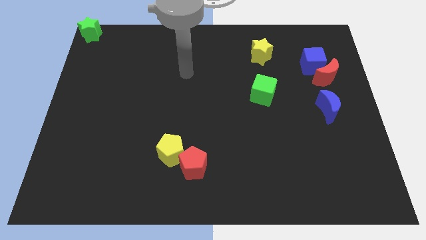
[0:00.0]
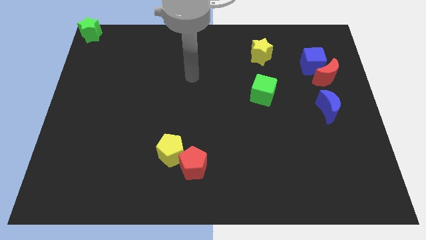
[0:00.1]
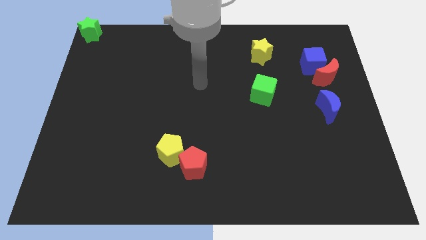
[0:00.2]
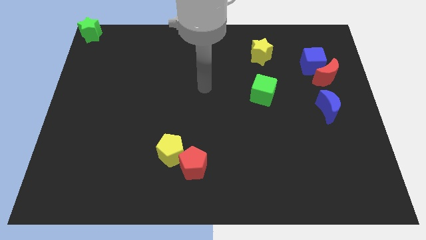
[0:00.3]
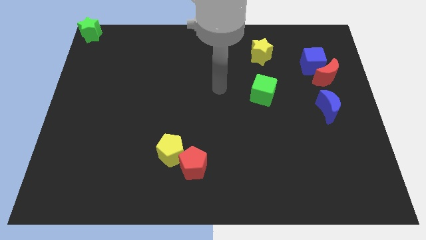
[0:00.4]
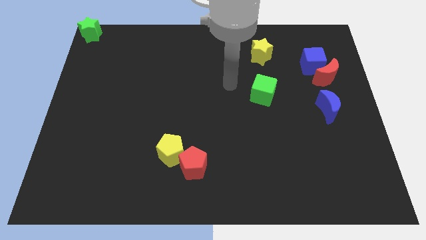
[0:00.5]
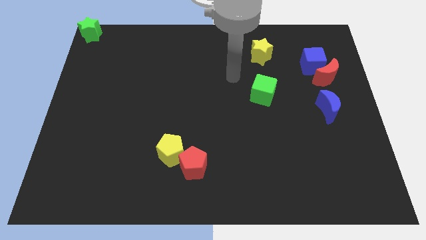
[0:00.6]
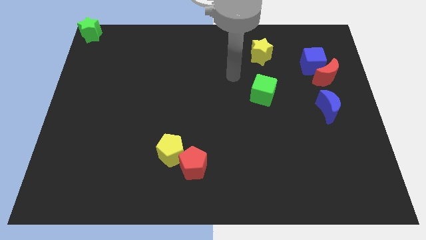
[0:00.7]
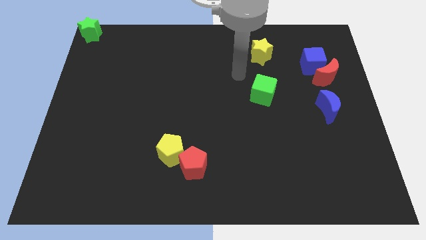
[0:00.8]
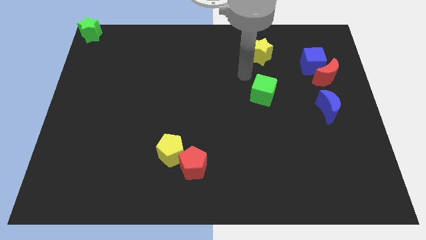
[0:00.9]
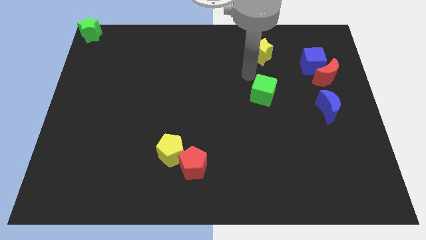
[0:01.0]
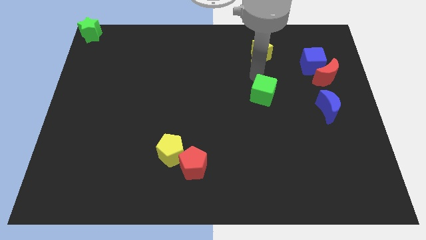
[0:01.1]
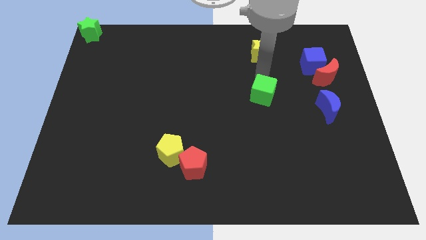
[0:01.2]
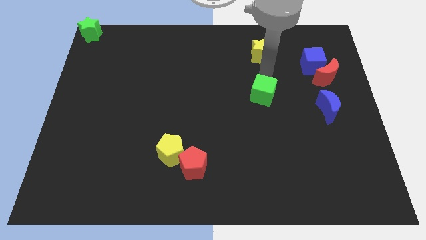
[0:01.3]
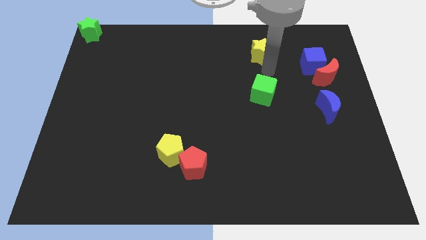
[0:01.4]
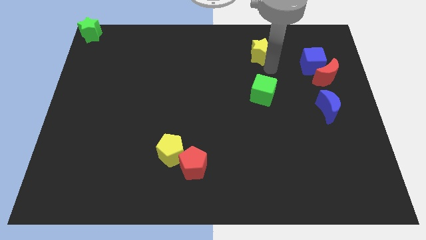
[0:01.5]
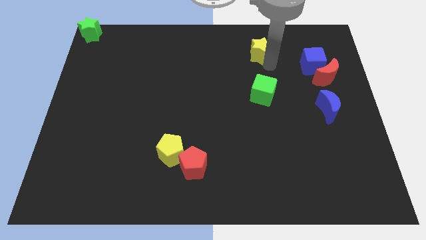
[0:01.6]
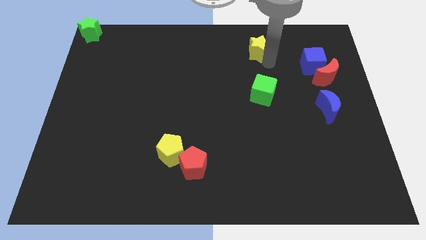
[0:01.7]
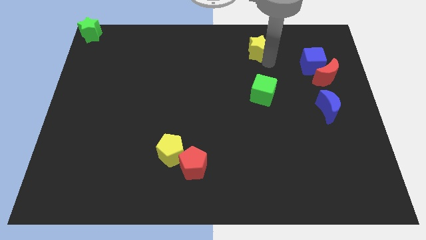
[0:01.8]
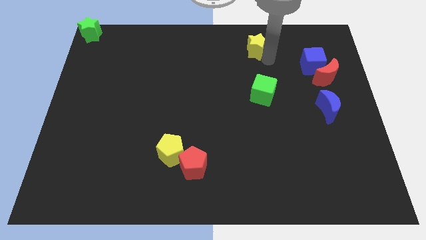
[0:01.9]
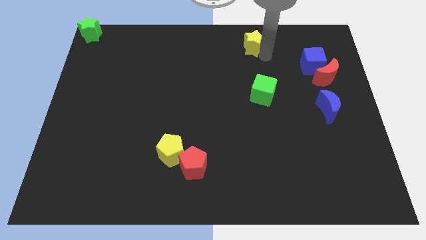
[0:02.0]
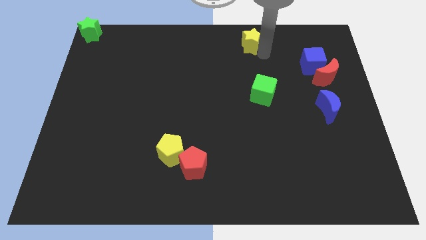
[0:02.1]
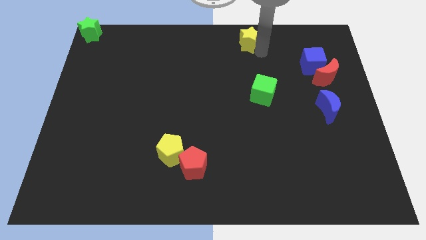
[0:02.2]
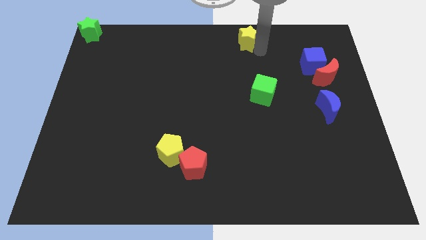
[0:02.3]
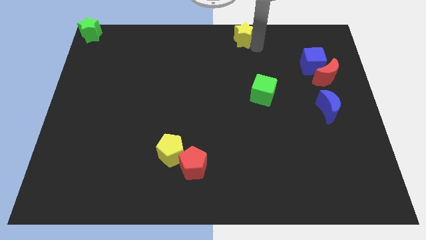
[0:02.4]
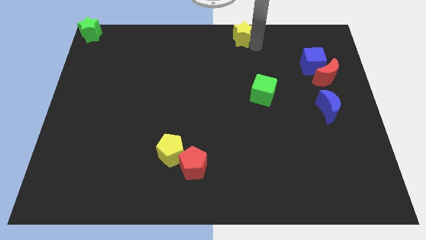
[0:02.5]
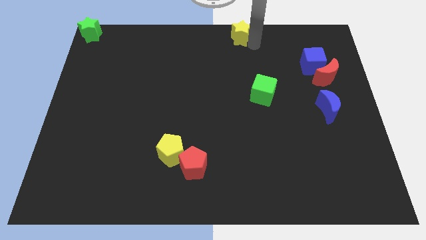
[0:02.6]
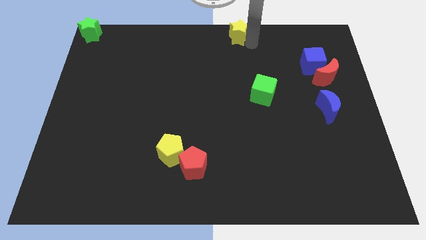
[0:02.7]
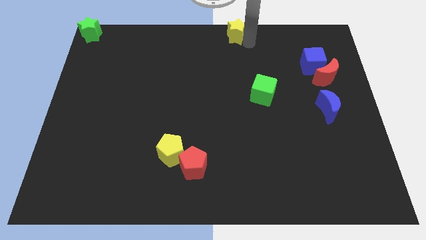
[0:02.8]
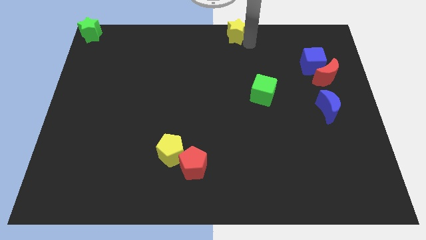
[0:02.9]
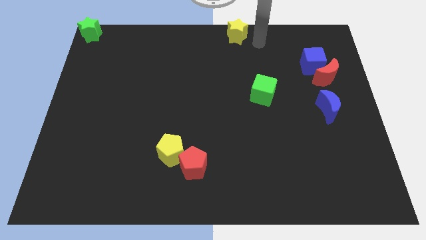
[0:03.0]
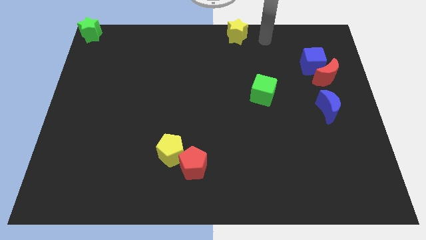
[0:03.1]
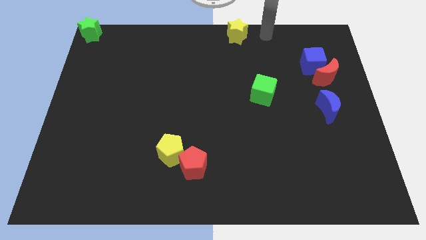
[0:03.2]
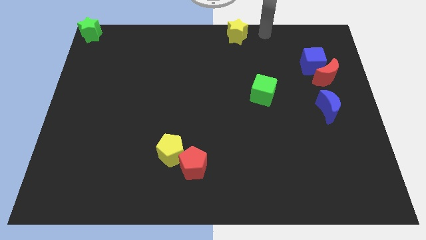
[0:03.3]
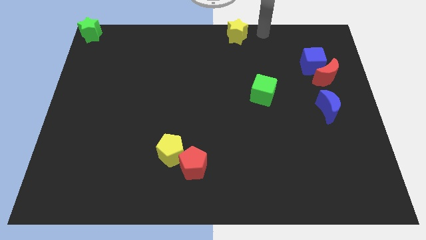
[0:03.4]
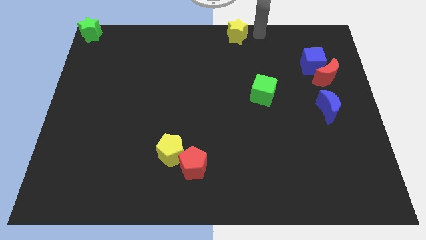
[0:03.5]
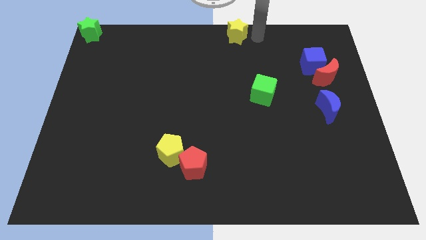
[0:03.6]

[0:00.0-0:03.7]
push the yellow star to the top center of the board

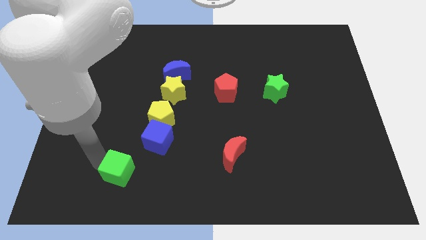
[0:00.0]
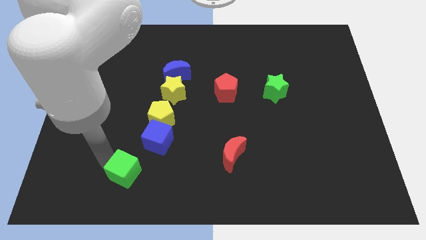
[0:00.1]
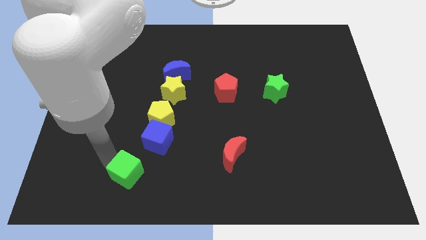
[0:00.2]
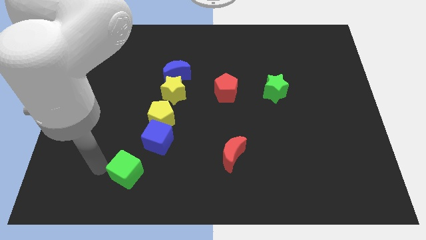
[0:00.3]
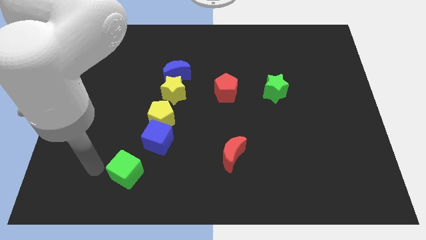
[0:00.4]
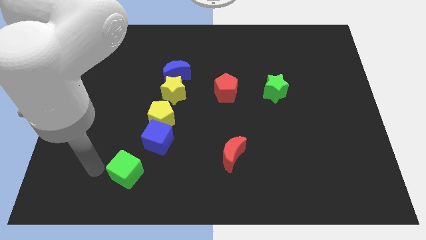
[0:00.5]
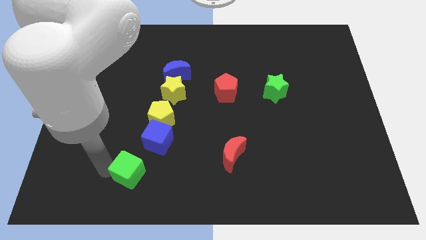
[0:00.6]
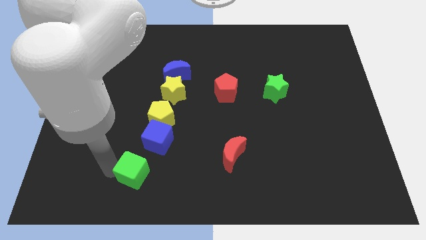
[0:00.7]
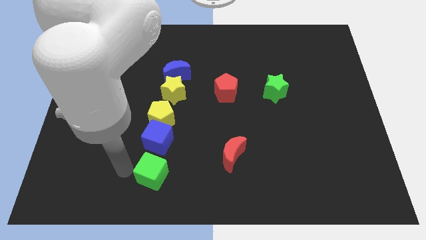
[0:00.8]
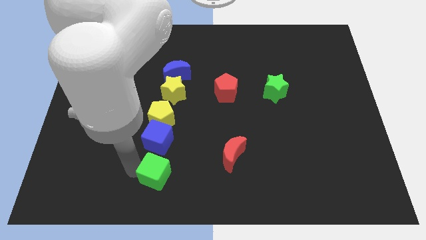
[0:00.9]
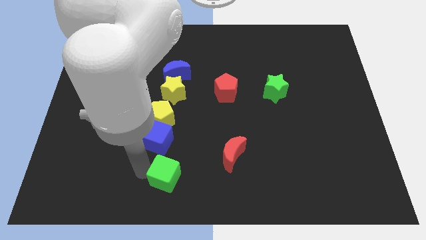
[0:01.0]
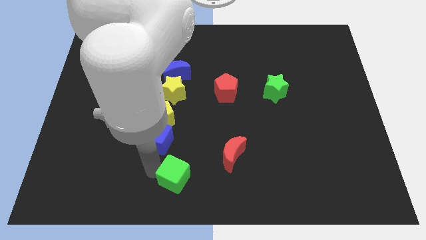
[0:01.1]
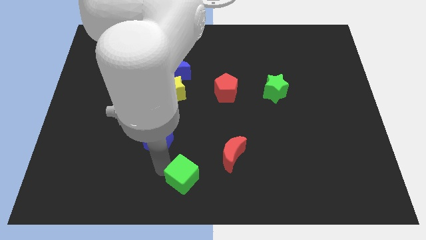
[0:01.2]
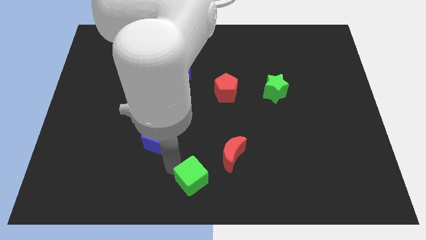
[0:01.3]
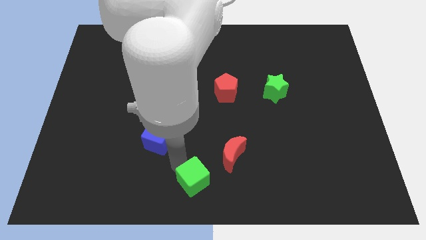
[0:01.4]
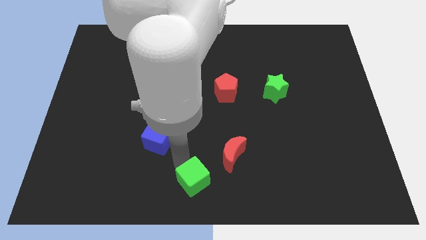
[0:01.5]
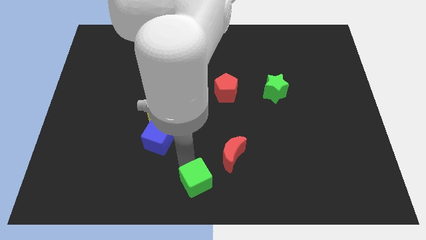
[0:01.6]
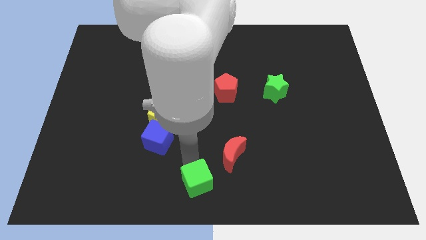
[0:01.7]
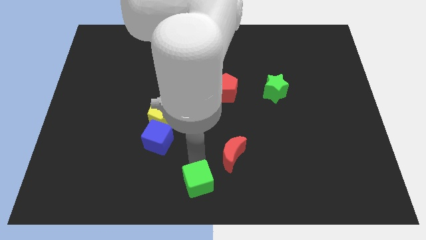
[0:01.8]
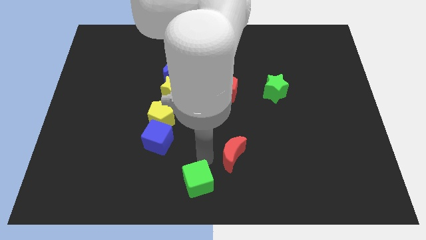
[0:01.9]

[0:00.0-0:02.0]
place the green cube towards the bottom center of the board

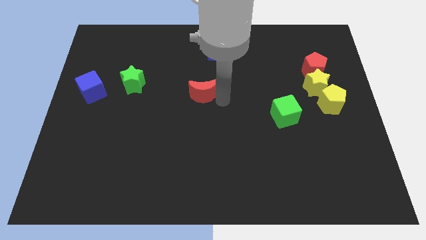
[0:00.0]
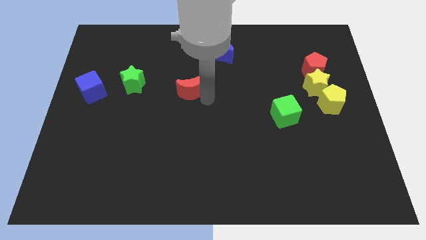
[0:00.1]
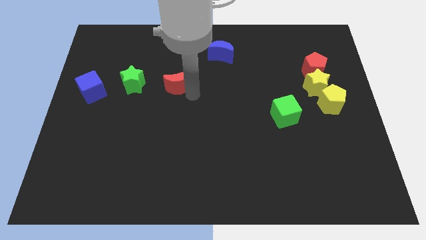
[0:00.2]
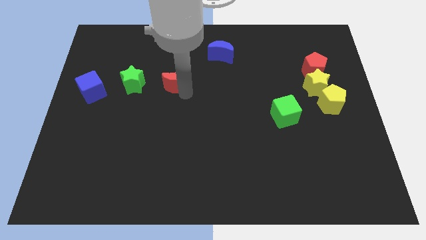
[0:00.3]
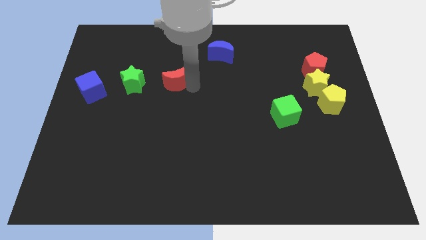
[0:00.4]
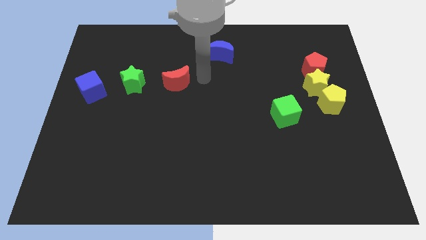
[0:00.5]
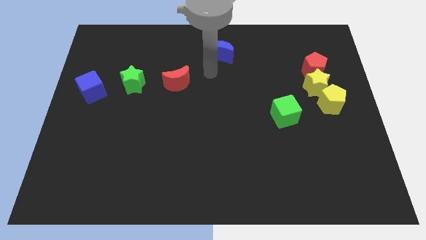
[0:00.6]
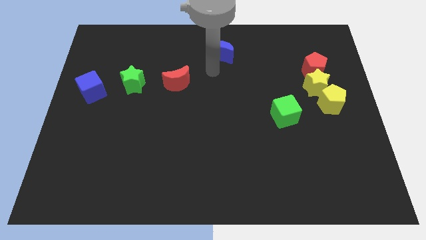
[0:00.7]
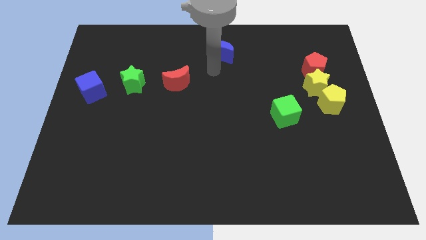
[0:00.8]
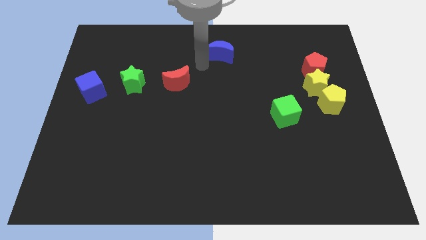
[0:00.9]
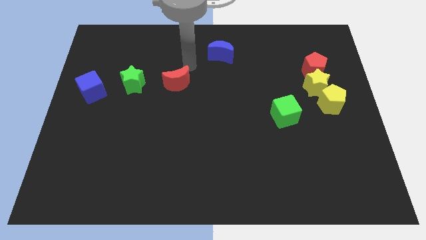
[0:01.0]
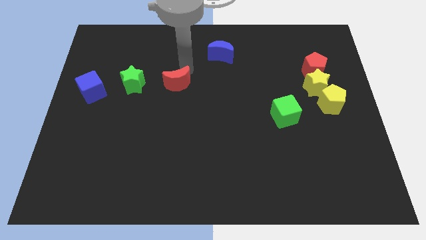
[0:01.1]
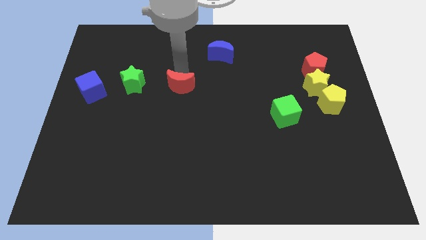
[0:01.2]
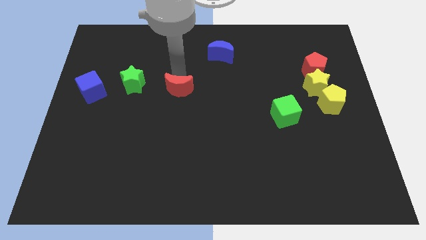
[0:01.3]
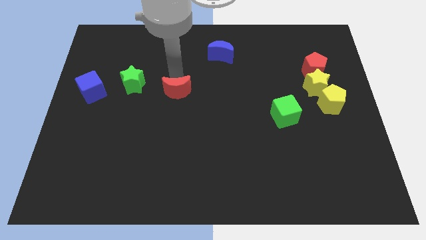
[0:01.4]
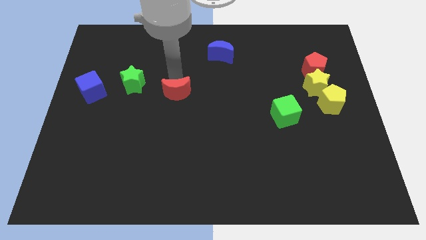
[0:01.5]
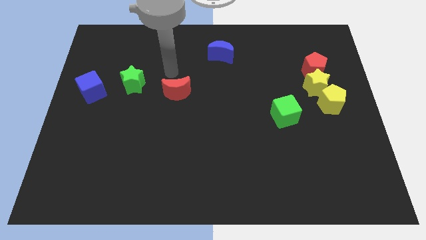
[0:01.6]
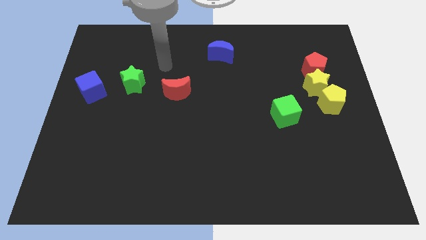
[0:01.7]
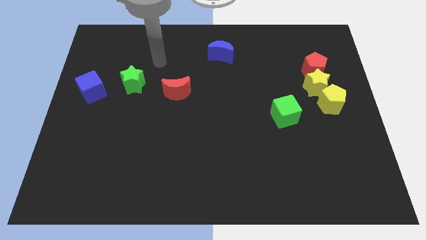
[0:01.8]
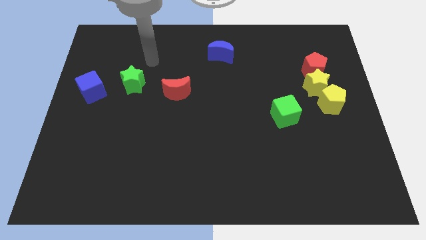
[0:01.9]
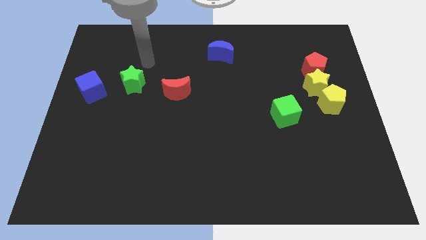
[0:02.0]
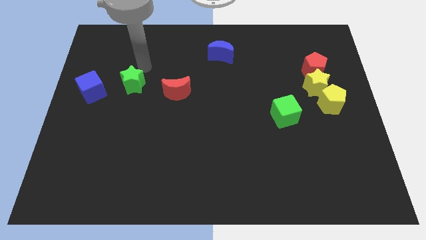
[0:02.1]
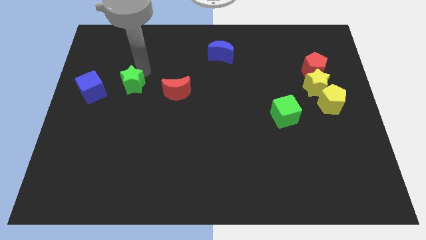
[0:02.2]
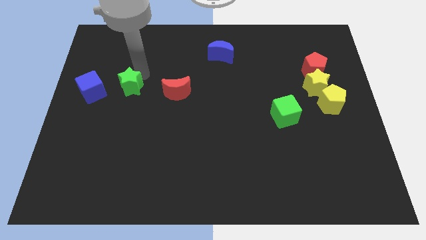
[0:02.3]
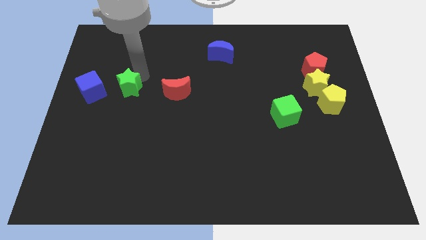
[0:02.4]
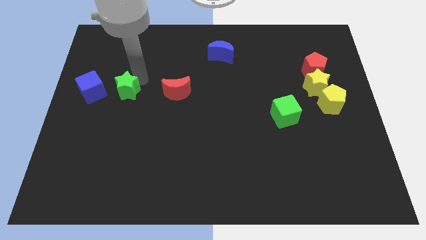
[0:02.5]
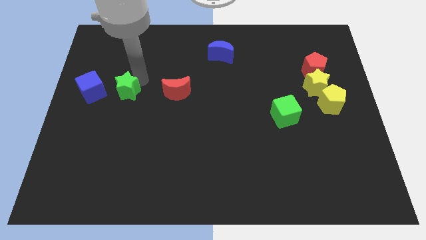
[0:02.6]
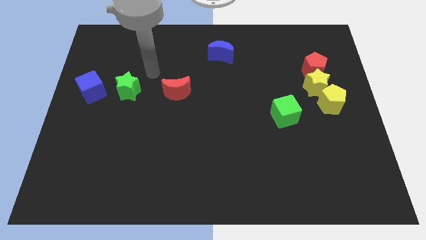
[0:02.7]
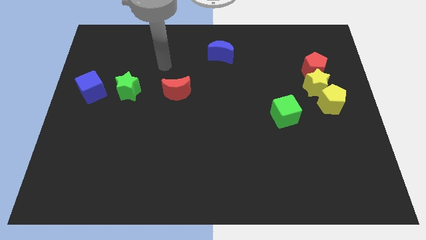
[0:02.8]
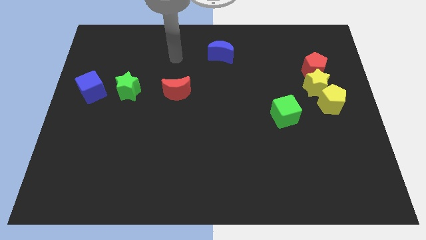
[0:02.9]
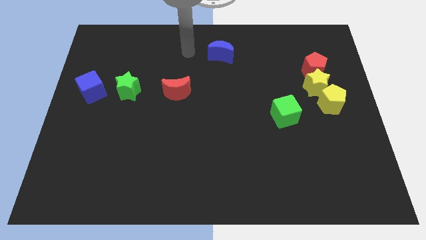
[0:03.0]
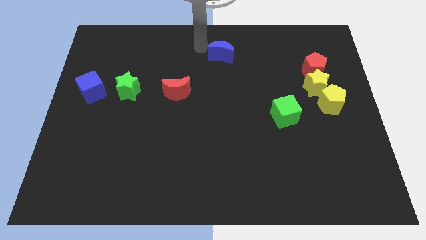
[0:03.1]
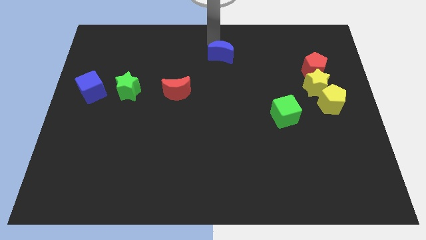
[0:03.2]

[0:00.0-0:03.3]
arrange the red crescent and green star in a horizontal line to the right of the blue cube

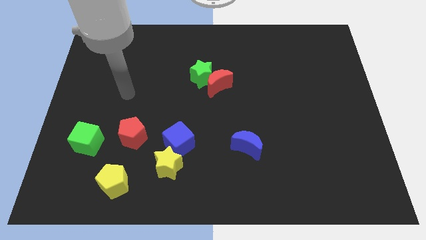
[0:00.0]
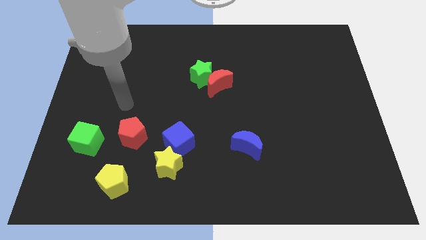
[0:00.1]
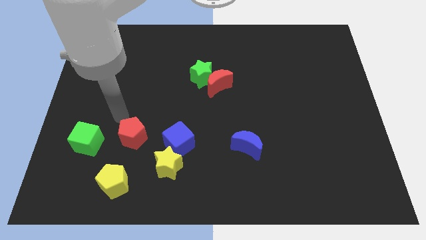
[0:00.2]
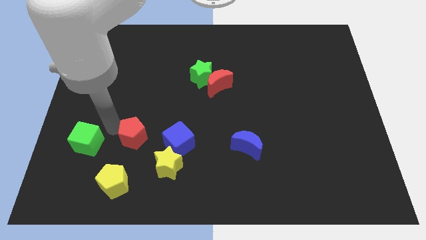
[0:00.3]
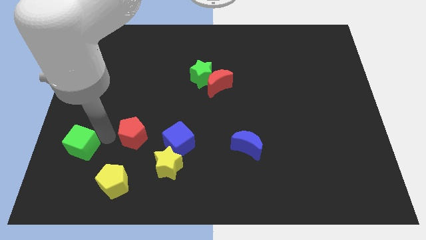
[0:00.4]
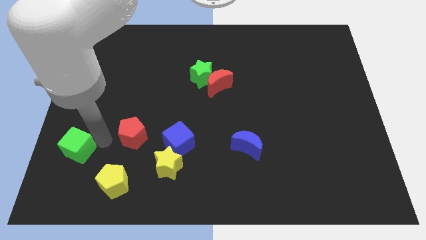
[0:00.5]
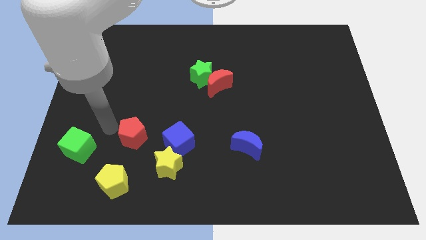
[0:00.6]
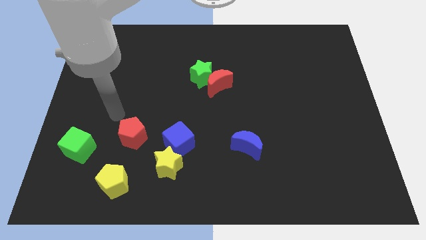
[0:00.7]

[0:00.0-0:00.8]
place the green cube to the left side of the yellow star
